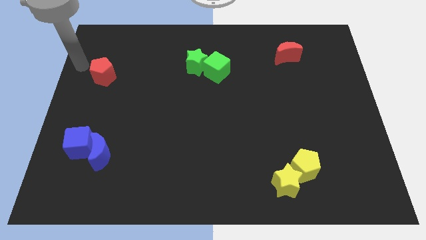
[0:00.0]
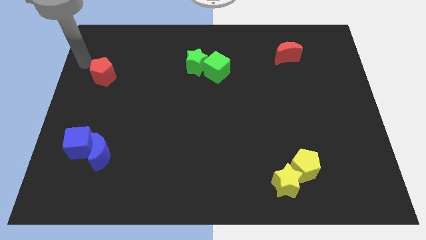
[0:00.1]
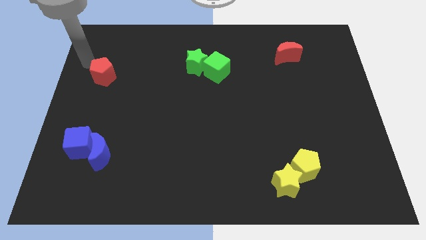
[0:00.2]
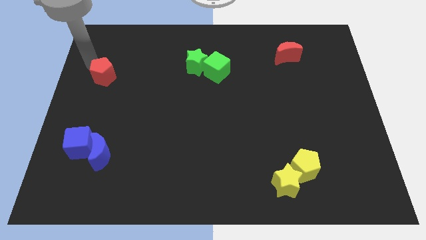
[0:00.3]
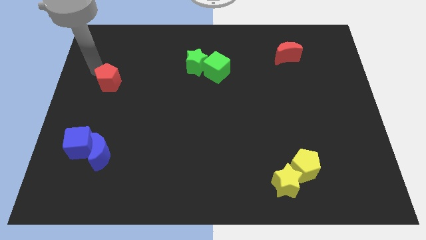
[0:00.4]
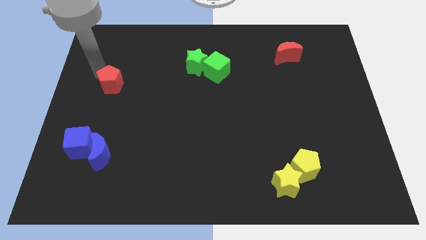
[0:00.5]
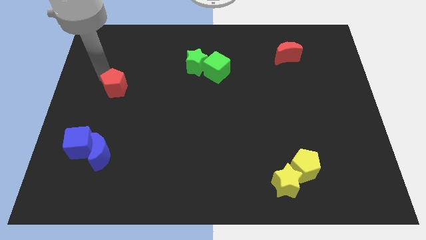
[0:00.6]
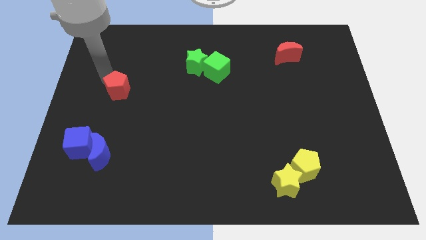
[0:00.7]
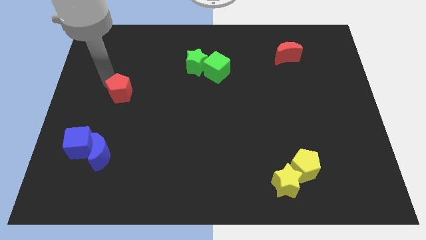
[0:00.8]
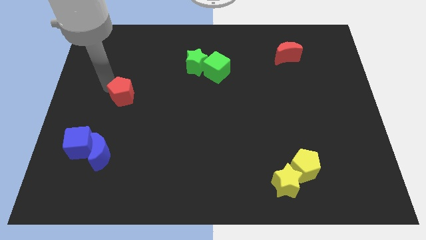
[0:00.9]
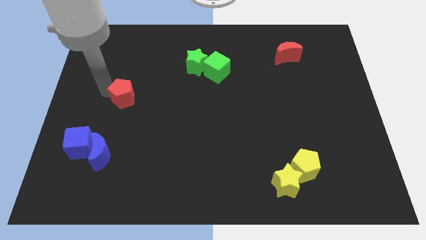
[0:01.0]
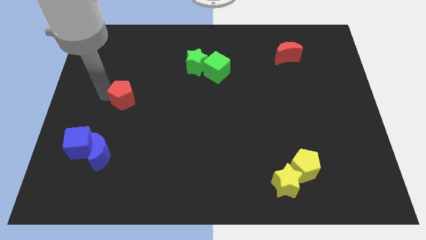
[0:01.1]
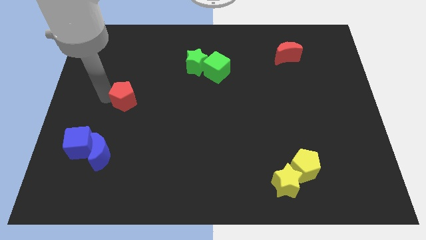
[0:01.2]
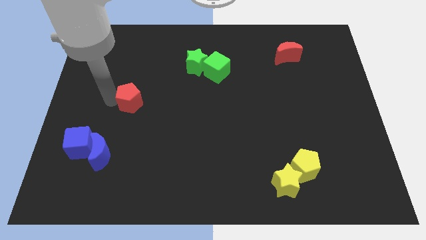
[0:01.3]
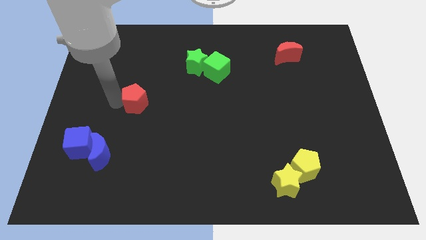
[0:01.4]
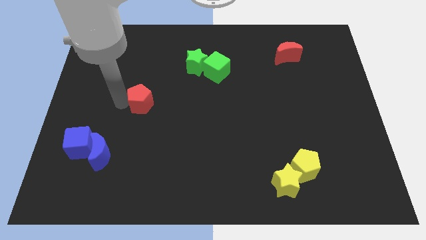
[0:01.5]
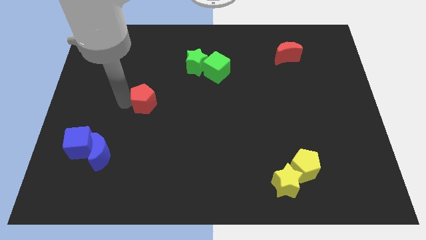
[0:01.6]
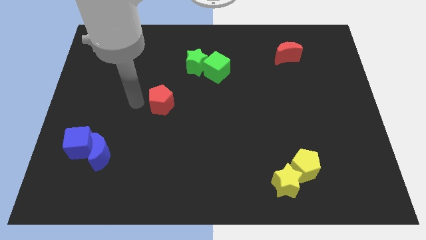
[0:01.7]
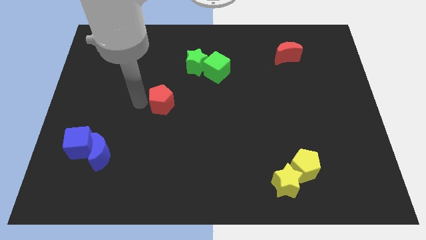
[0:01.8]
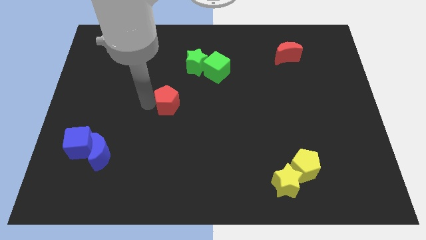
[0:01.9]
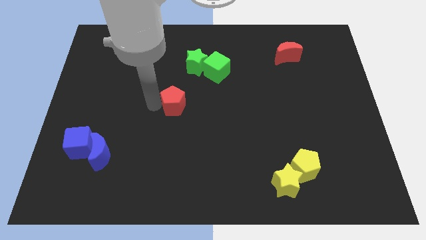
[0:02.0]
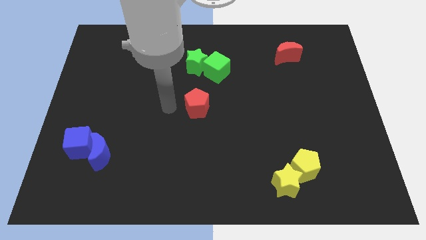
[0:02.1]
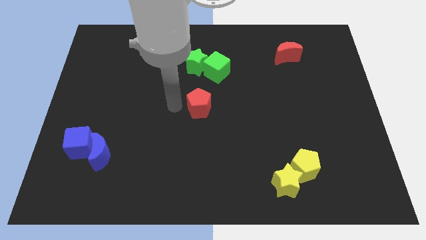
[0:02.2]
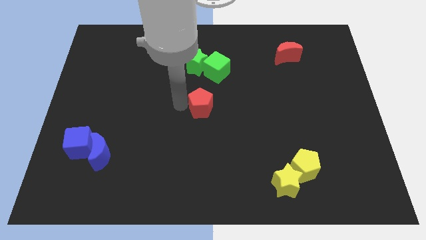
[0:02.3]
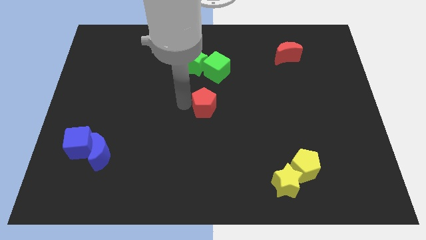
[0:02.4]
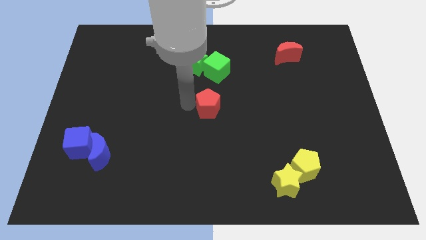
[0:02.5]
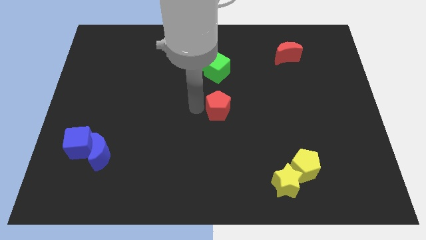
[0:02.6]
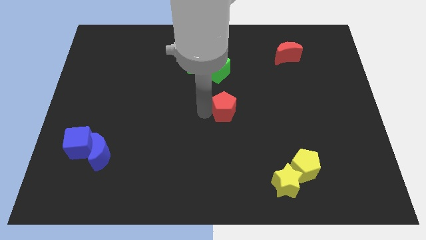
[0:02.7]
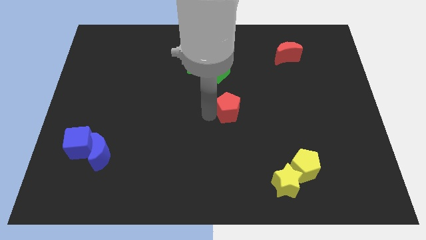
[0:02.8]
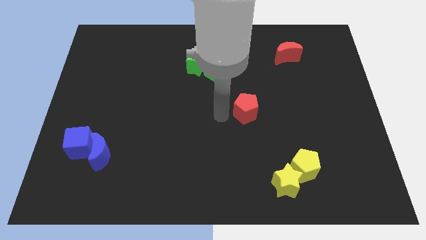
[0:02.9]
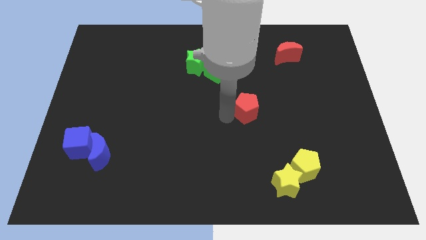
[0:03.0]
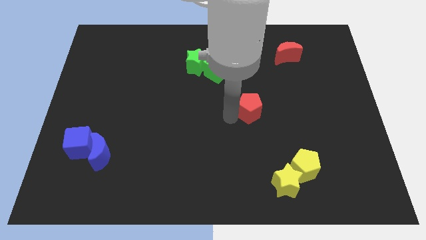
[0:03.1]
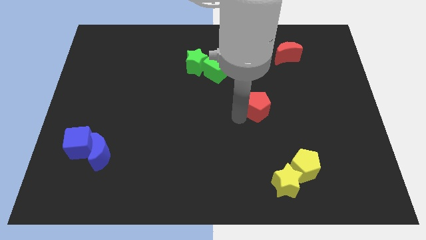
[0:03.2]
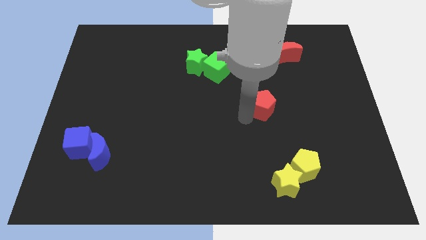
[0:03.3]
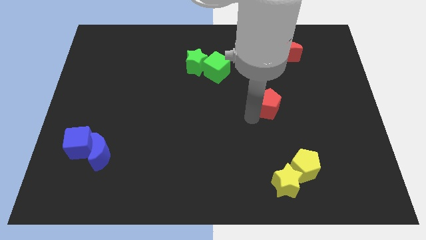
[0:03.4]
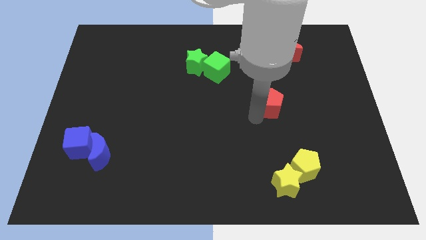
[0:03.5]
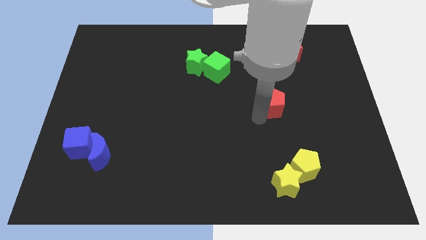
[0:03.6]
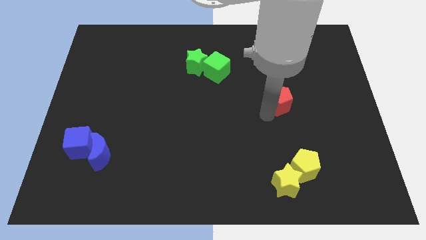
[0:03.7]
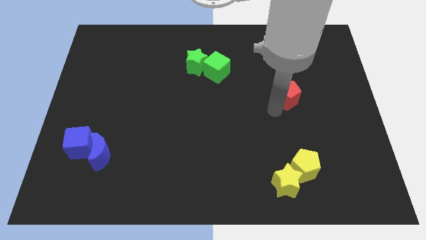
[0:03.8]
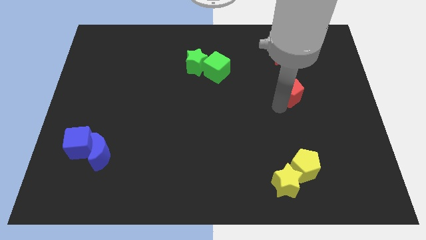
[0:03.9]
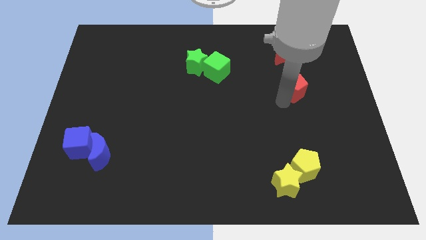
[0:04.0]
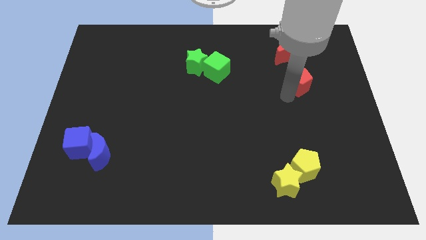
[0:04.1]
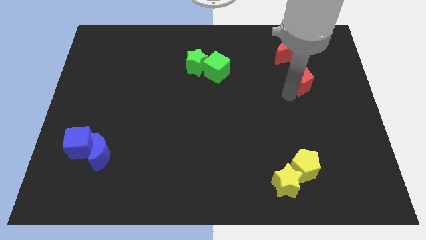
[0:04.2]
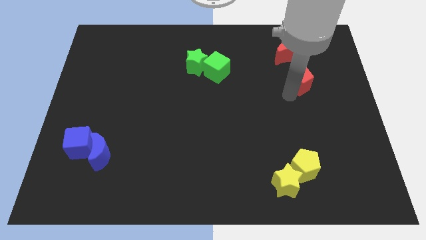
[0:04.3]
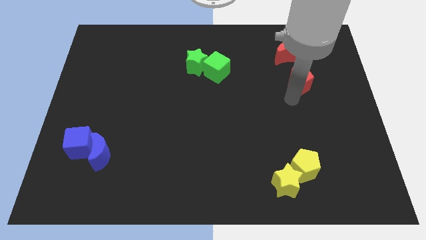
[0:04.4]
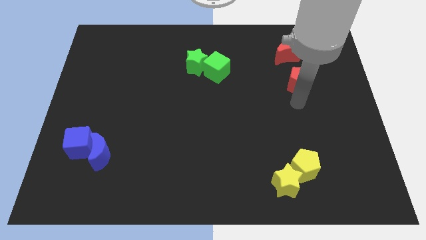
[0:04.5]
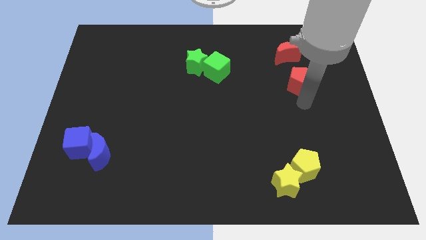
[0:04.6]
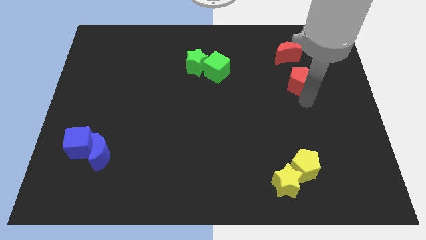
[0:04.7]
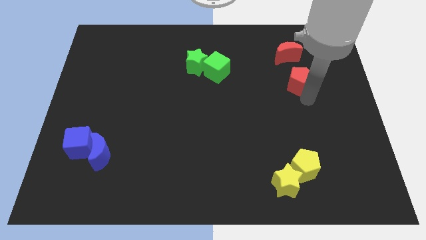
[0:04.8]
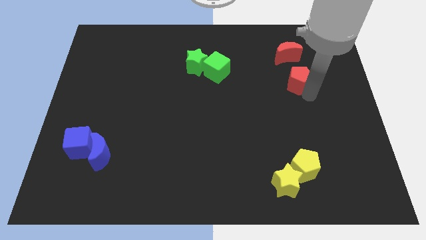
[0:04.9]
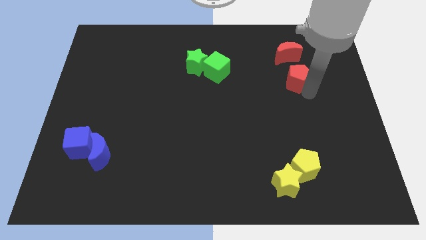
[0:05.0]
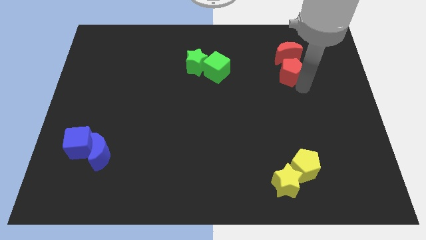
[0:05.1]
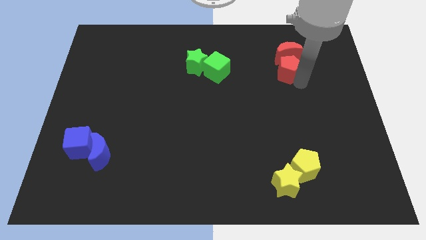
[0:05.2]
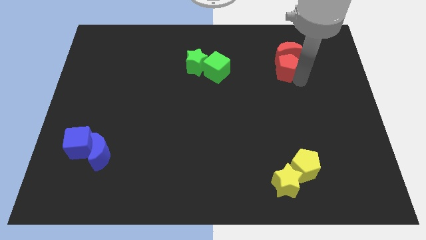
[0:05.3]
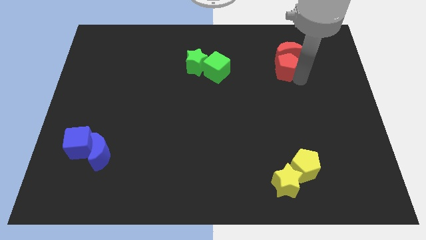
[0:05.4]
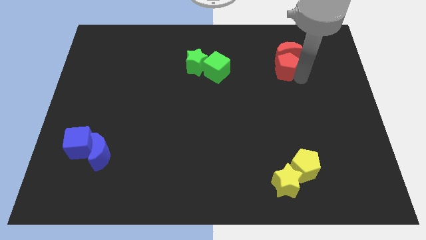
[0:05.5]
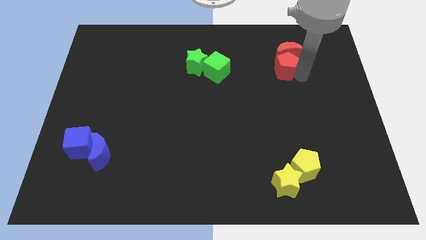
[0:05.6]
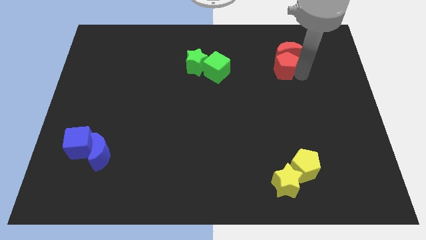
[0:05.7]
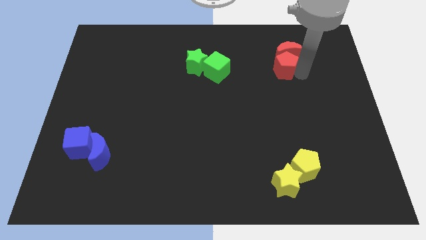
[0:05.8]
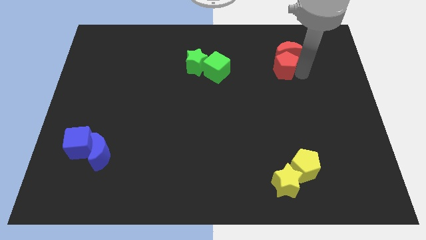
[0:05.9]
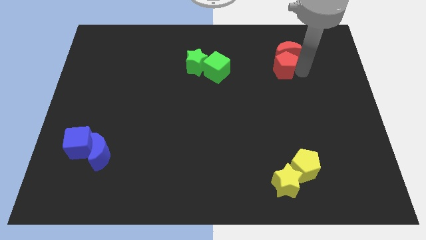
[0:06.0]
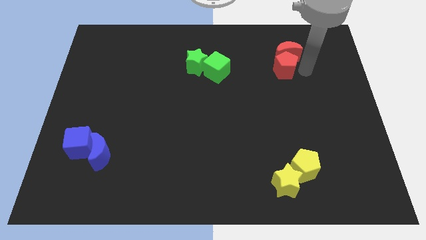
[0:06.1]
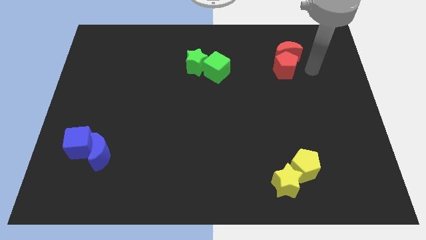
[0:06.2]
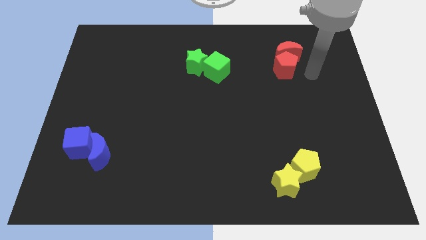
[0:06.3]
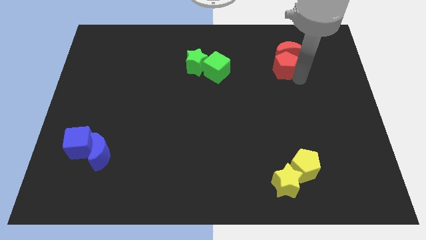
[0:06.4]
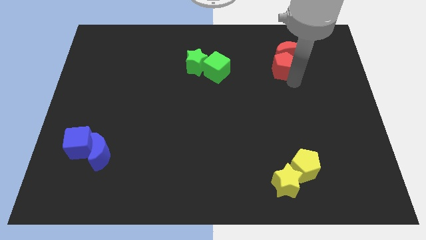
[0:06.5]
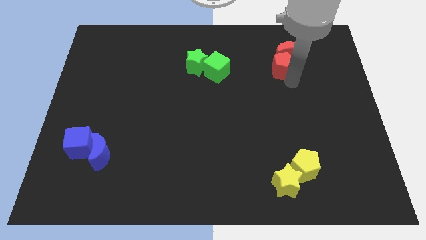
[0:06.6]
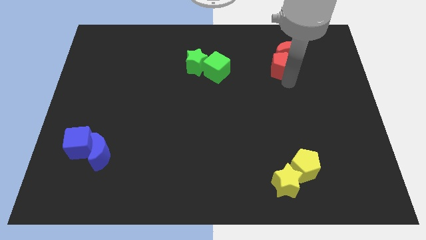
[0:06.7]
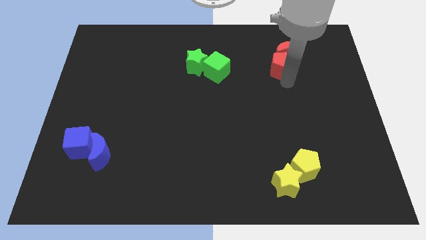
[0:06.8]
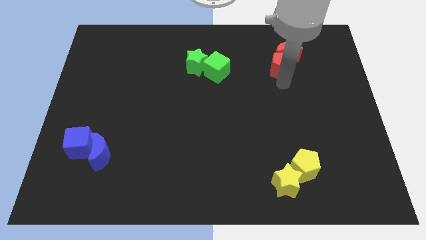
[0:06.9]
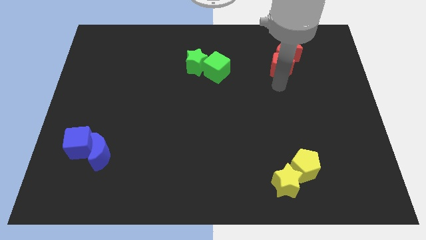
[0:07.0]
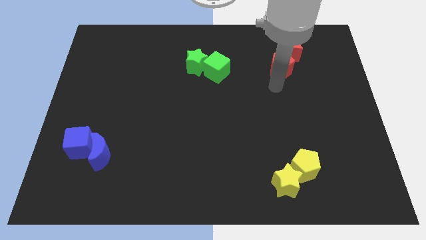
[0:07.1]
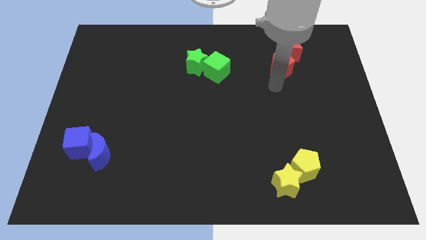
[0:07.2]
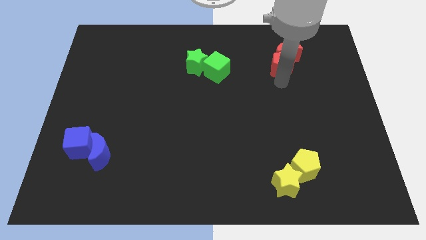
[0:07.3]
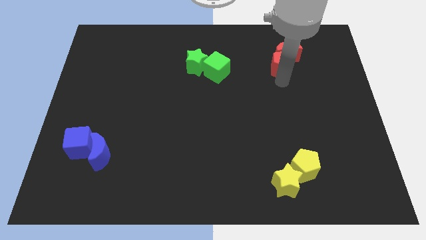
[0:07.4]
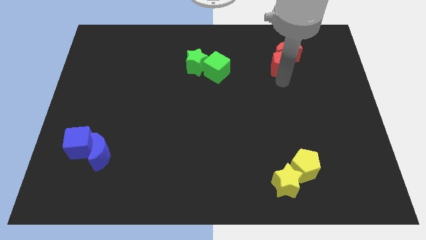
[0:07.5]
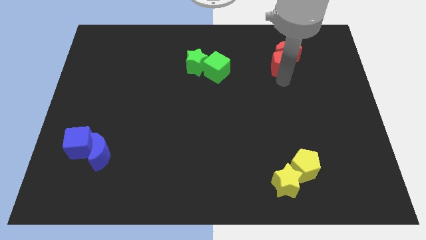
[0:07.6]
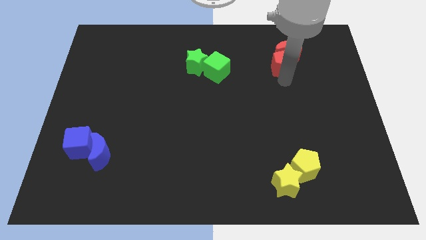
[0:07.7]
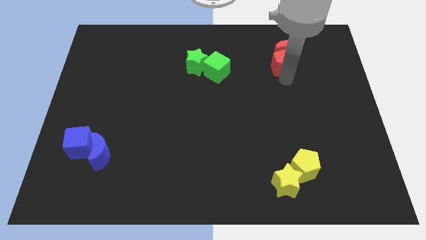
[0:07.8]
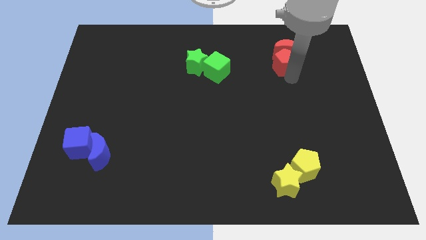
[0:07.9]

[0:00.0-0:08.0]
place the two red blocks together at the right side of the green blocks

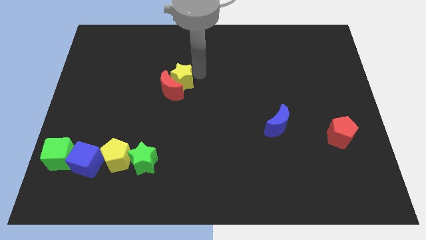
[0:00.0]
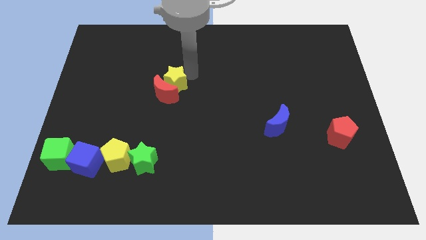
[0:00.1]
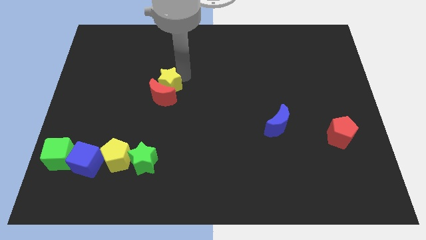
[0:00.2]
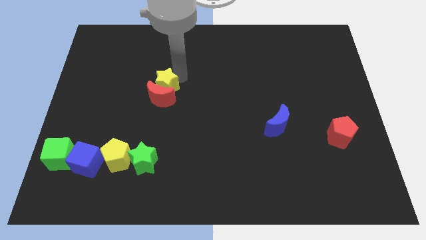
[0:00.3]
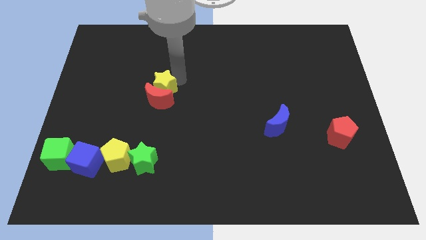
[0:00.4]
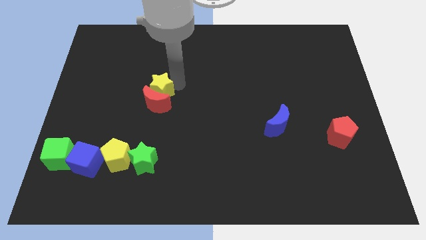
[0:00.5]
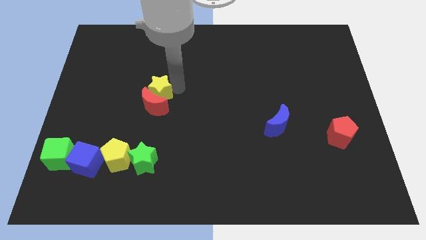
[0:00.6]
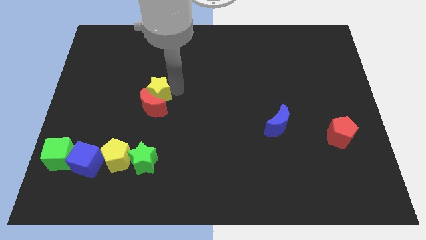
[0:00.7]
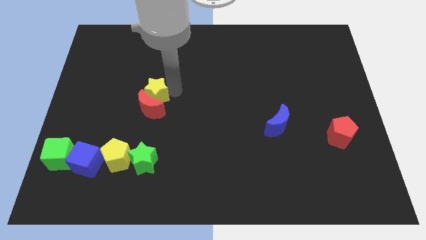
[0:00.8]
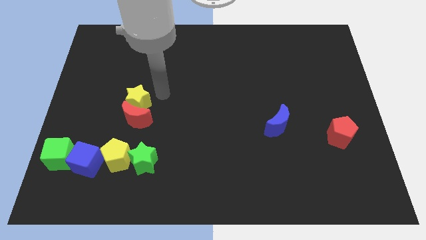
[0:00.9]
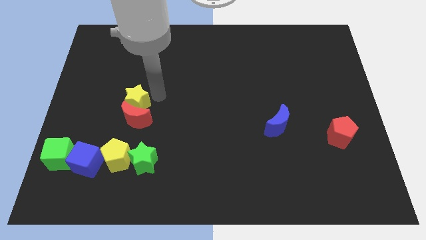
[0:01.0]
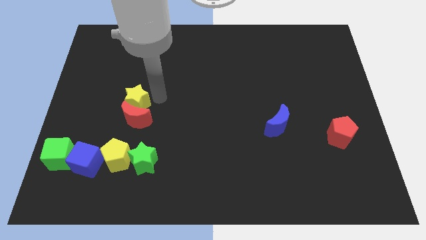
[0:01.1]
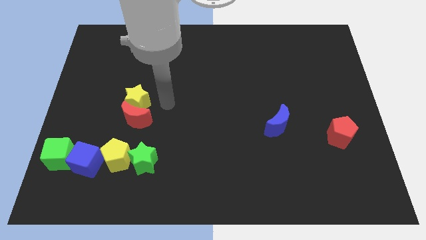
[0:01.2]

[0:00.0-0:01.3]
push red moon with yellow star
